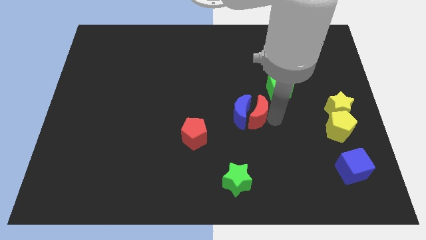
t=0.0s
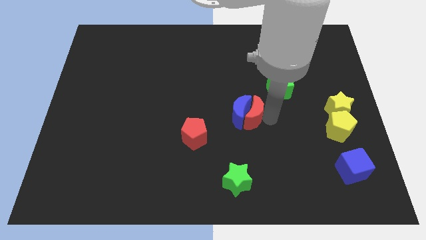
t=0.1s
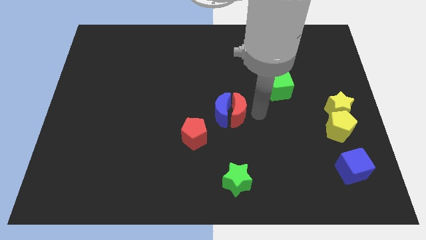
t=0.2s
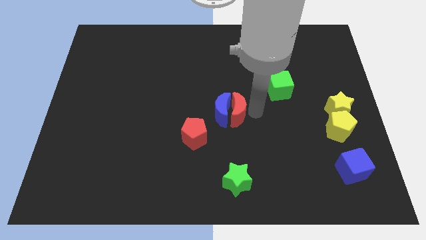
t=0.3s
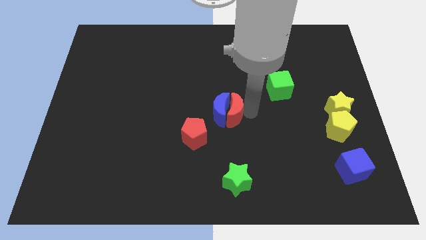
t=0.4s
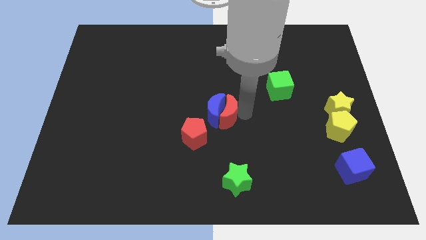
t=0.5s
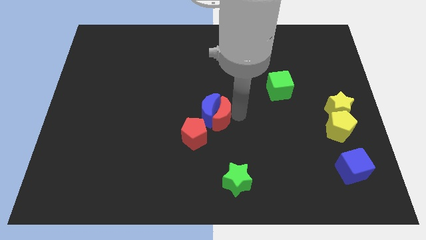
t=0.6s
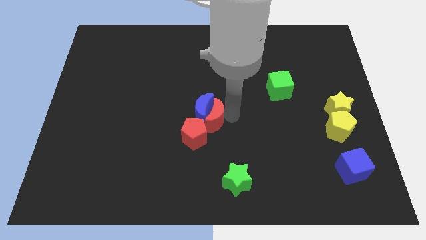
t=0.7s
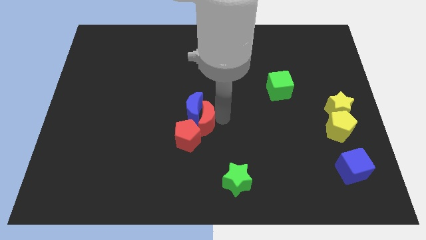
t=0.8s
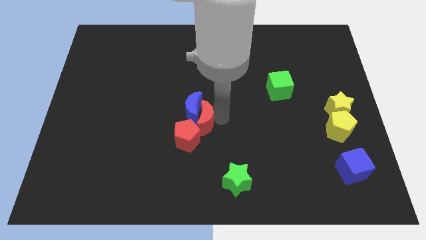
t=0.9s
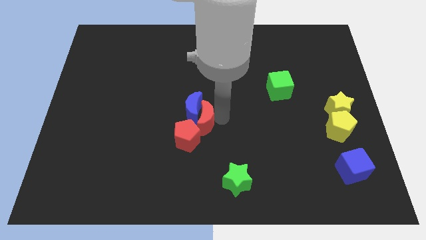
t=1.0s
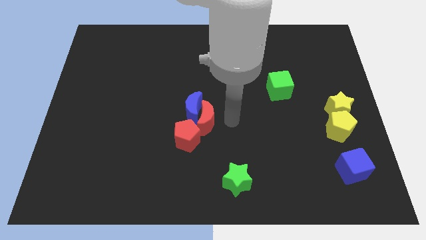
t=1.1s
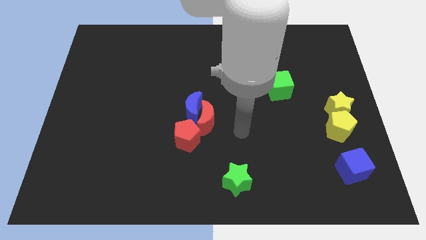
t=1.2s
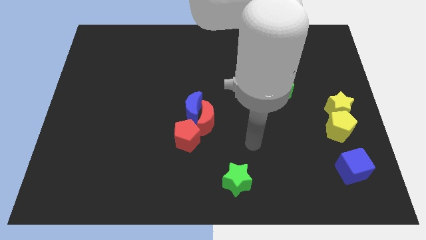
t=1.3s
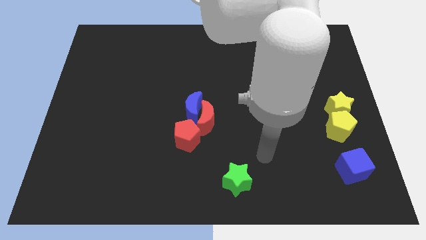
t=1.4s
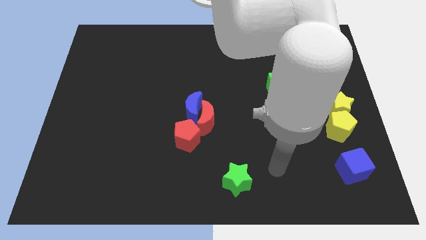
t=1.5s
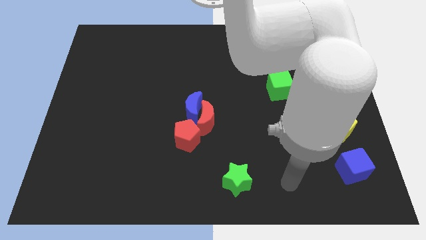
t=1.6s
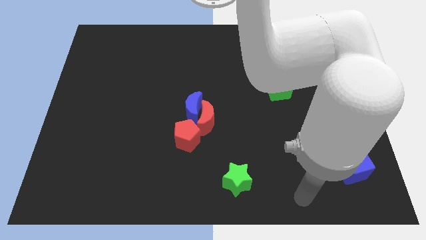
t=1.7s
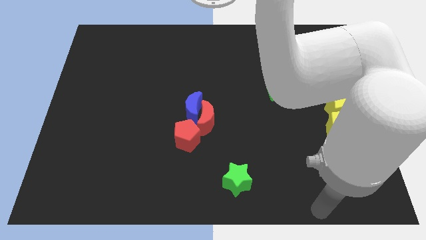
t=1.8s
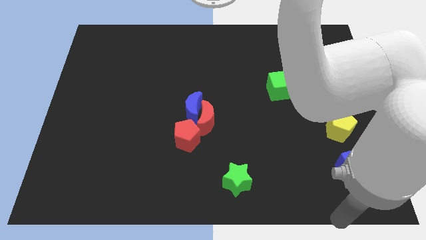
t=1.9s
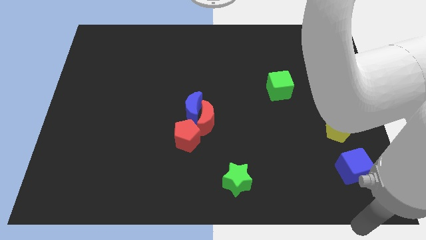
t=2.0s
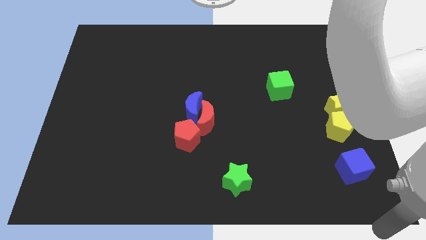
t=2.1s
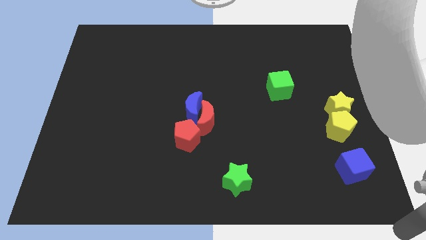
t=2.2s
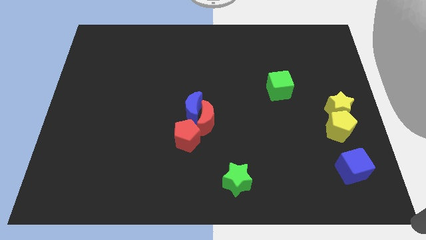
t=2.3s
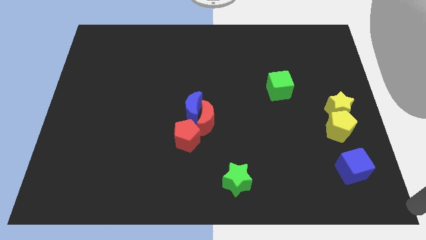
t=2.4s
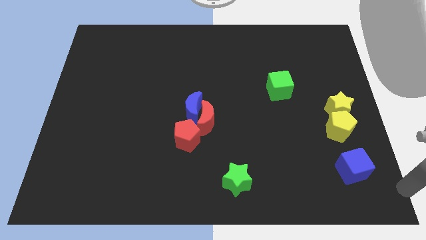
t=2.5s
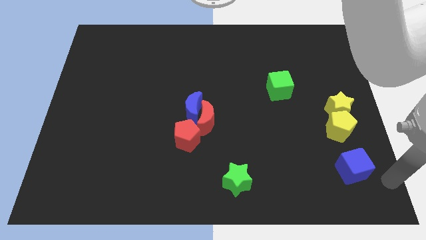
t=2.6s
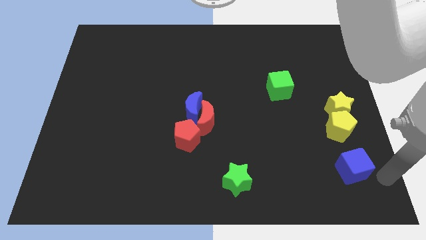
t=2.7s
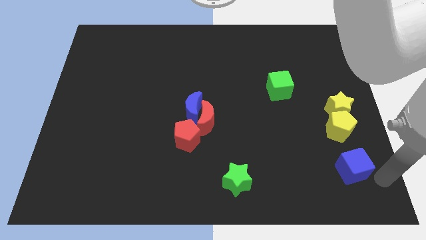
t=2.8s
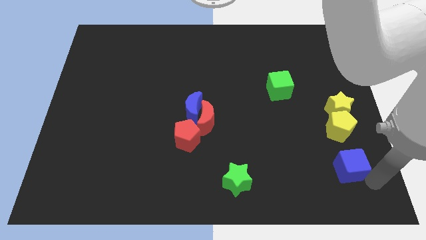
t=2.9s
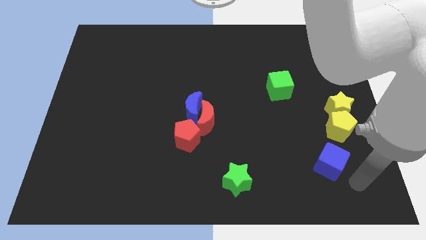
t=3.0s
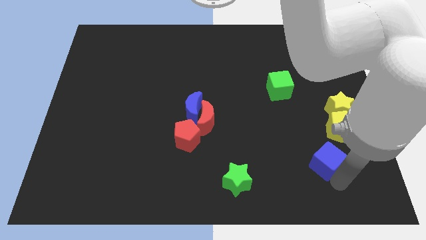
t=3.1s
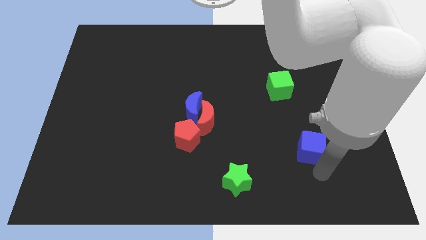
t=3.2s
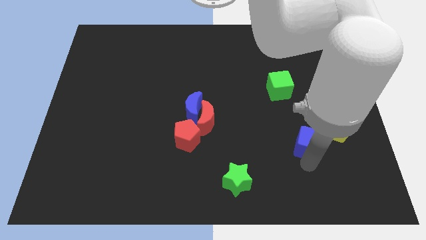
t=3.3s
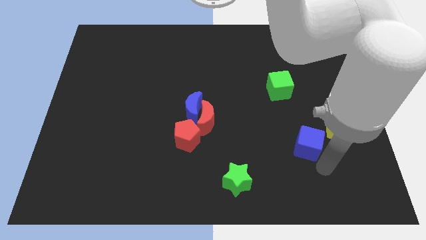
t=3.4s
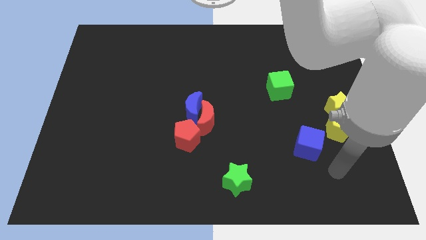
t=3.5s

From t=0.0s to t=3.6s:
push blue cube to the bottom left of yellow pentagon

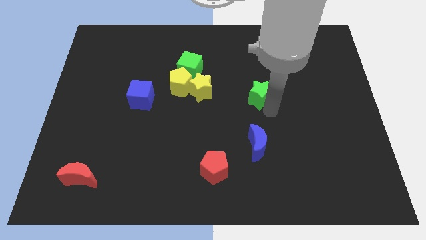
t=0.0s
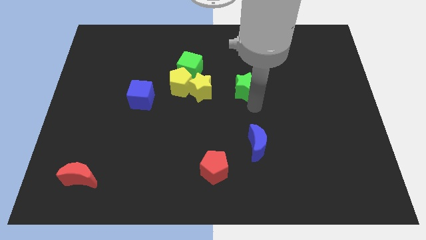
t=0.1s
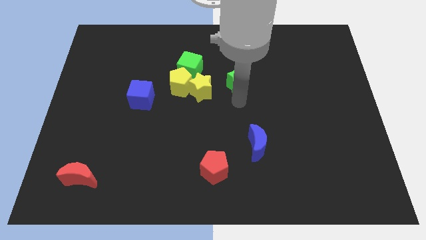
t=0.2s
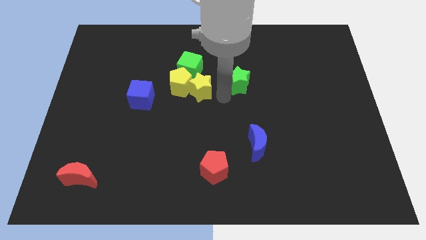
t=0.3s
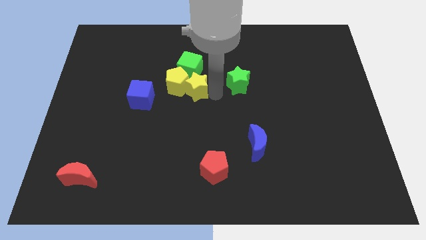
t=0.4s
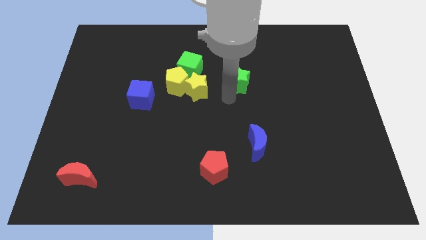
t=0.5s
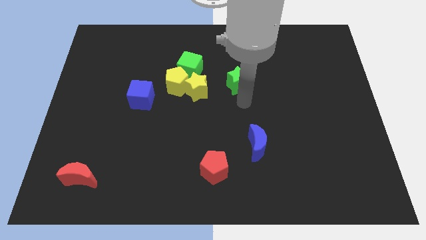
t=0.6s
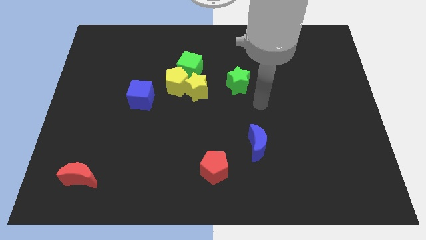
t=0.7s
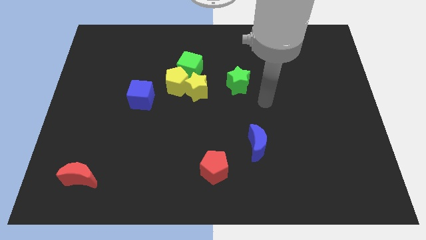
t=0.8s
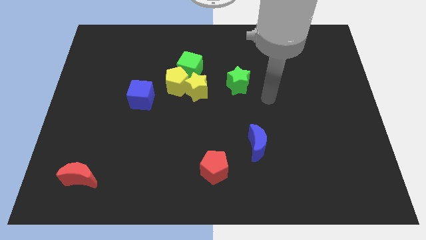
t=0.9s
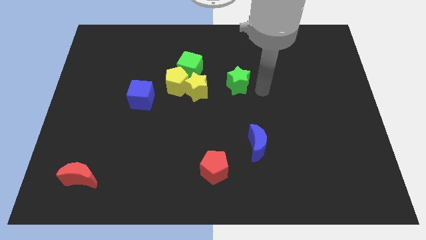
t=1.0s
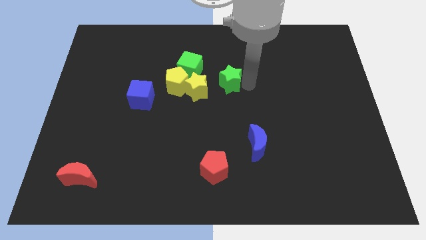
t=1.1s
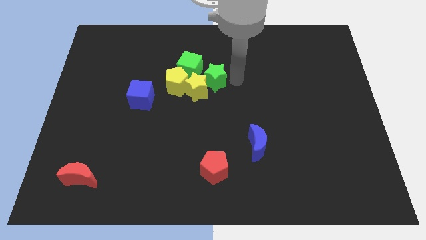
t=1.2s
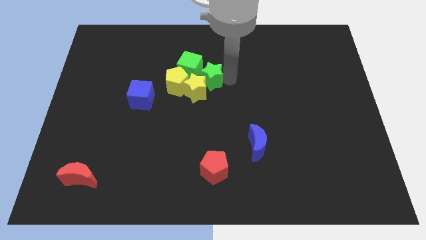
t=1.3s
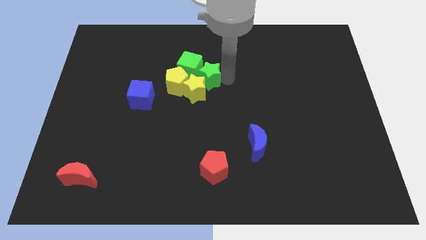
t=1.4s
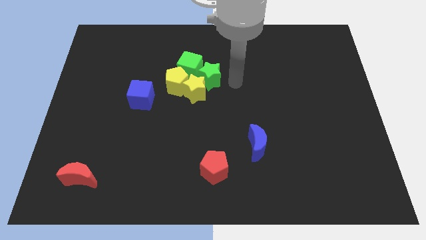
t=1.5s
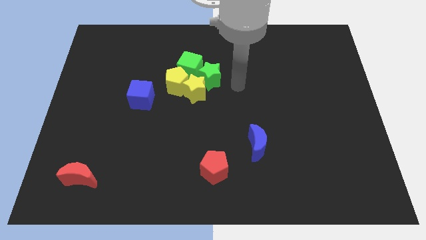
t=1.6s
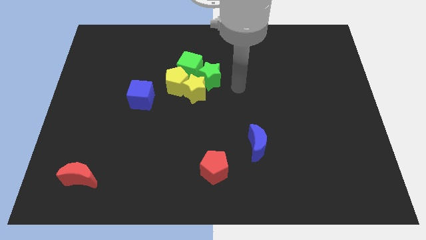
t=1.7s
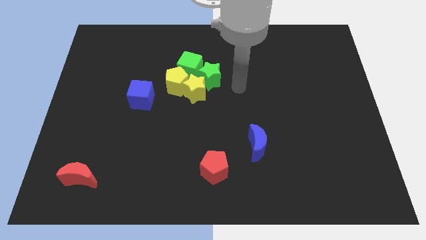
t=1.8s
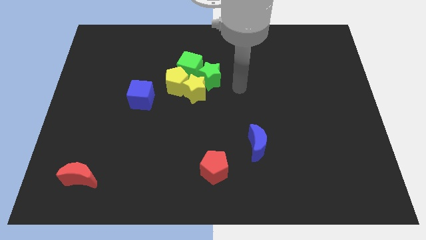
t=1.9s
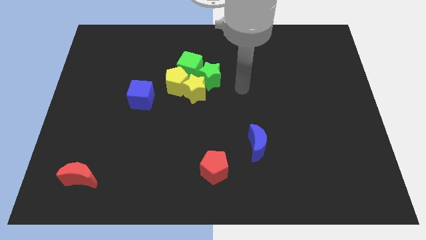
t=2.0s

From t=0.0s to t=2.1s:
slide green star into green cube

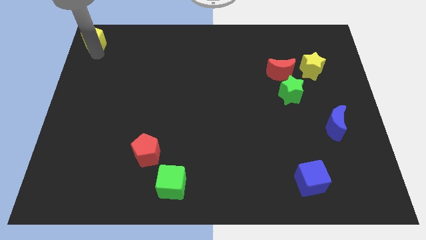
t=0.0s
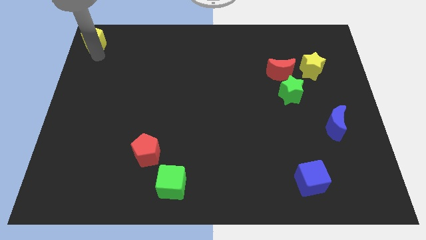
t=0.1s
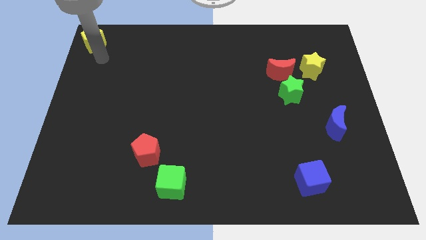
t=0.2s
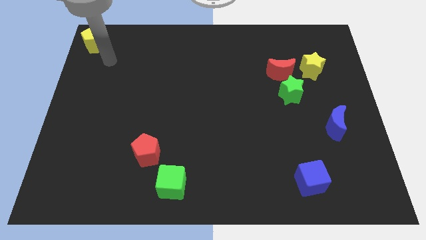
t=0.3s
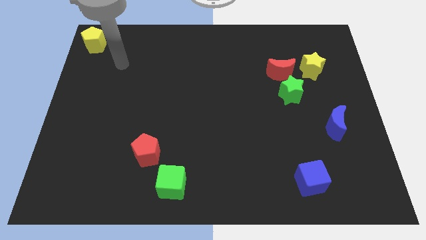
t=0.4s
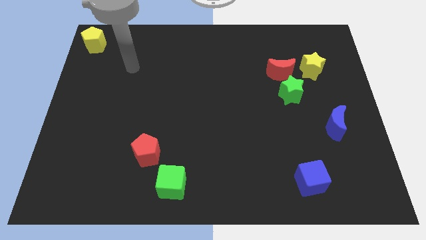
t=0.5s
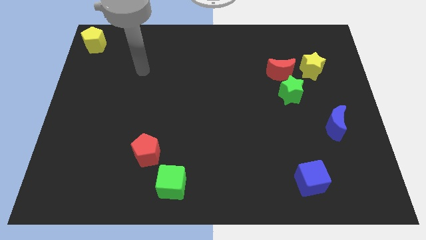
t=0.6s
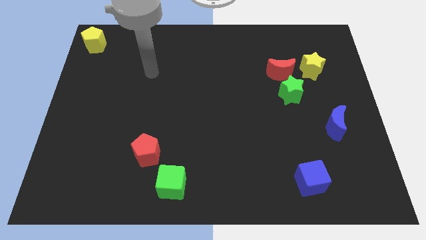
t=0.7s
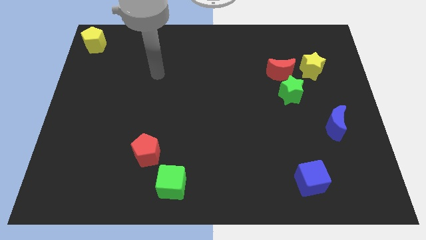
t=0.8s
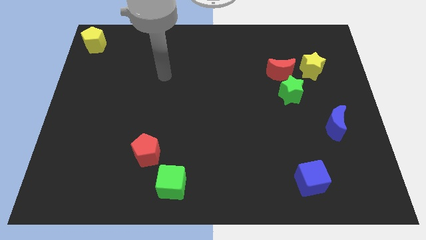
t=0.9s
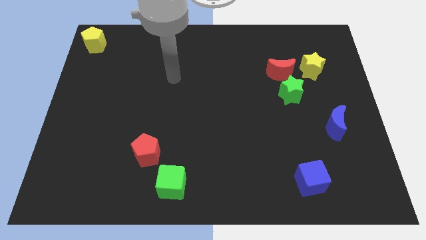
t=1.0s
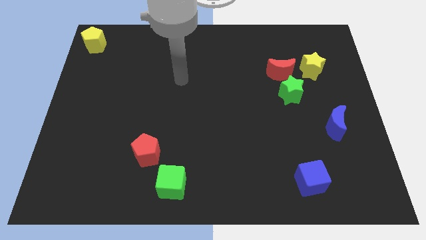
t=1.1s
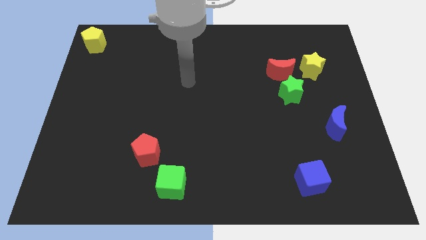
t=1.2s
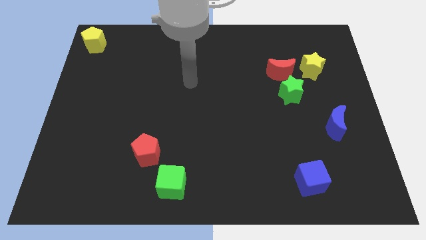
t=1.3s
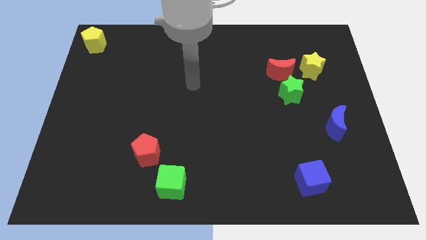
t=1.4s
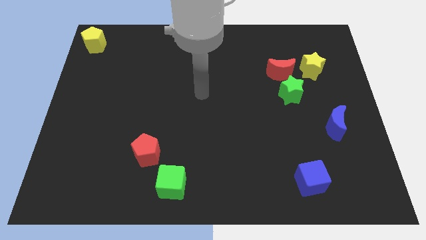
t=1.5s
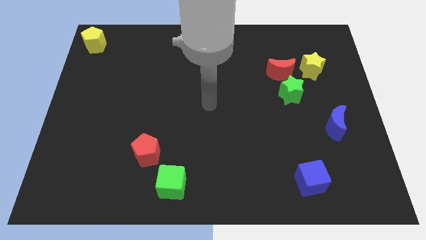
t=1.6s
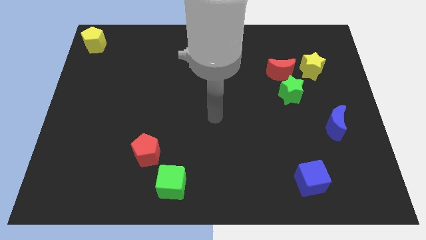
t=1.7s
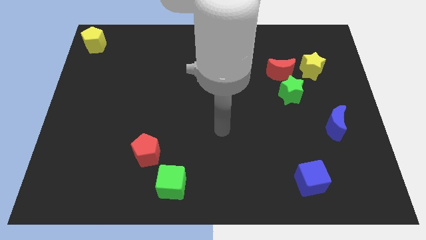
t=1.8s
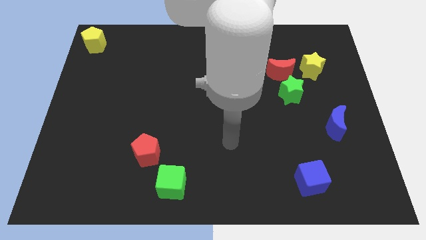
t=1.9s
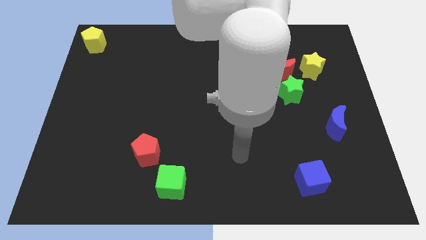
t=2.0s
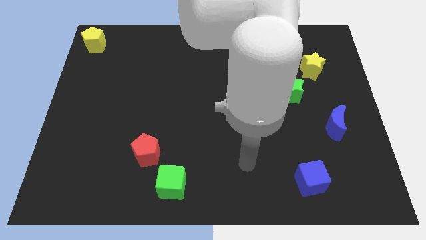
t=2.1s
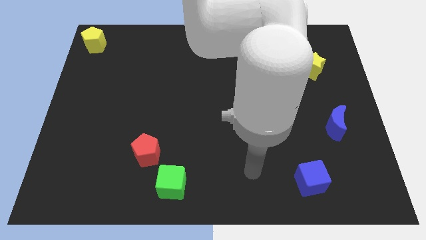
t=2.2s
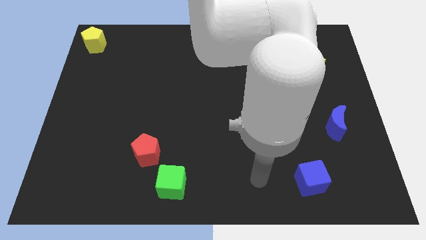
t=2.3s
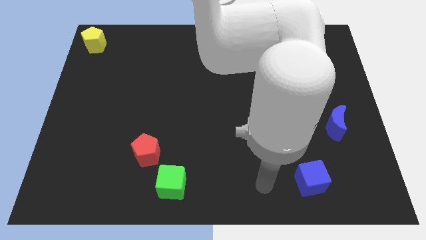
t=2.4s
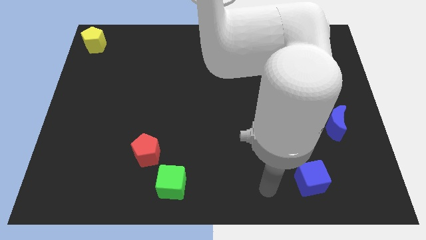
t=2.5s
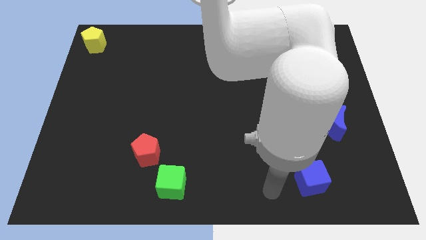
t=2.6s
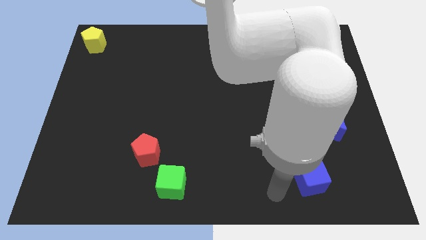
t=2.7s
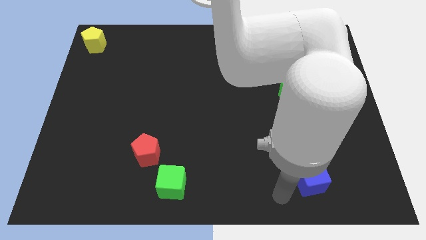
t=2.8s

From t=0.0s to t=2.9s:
go near blue cube

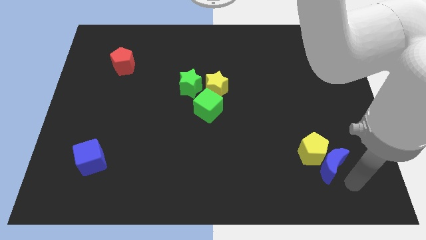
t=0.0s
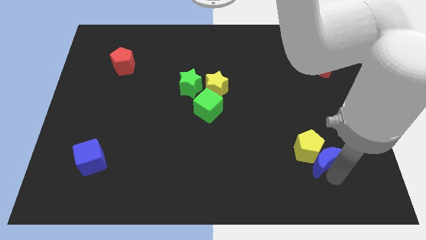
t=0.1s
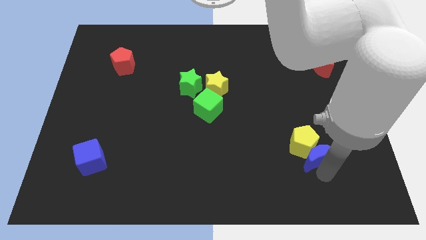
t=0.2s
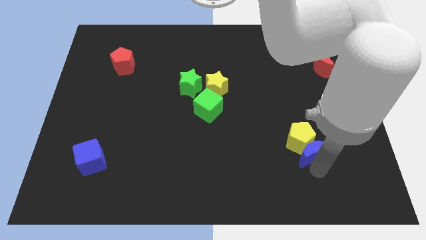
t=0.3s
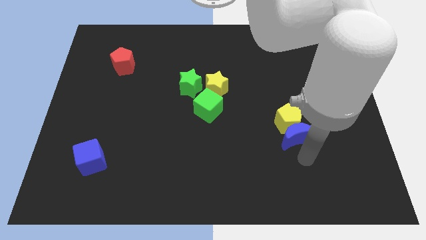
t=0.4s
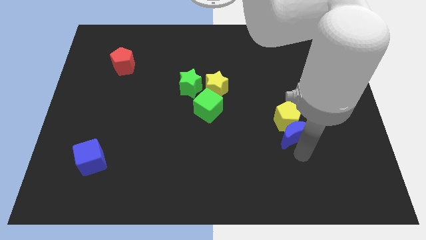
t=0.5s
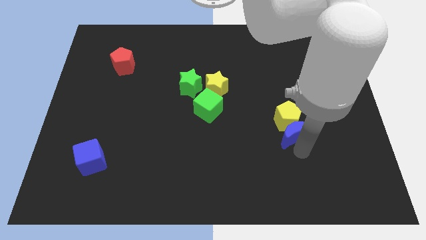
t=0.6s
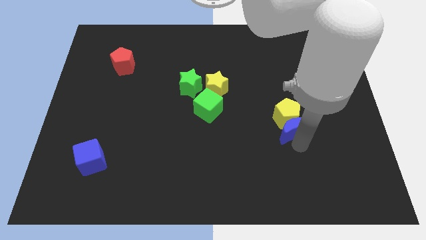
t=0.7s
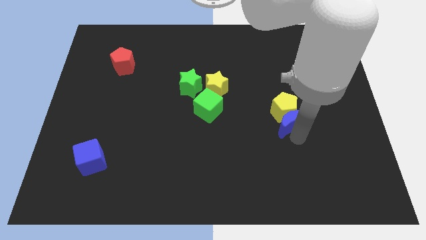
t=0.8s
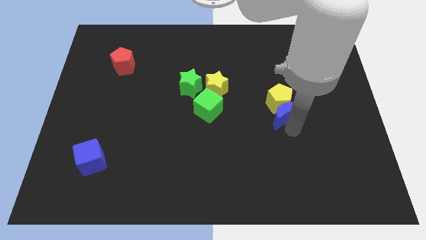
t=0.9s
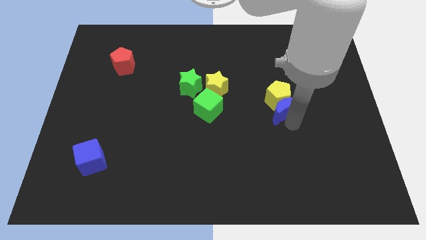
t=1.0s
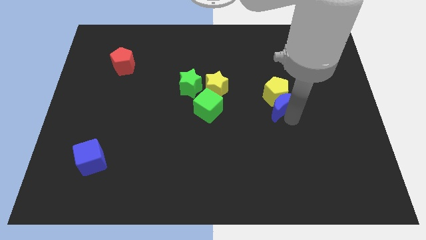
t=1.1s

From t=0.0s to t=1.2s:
move the blue crescent and yellow pentagon upside
